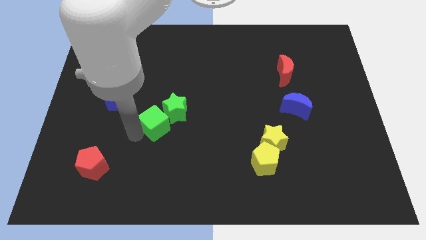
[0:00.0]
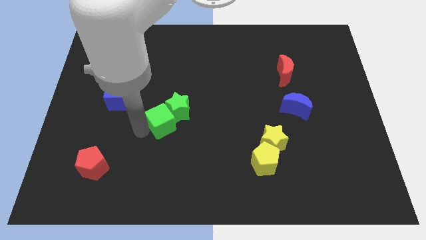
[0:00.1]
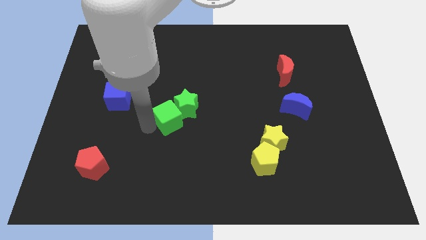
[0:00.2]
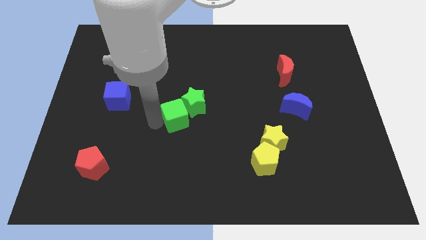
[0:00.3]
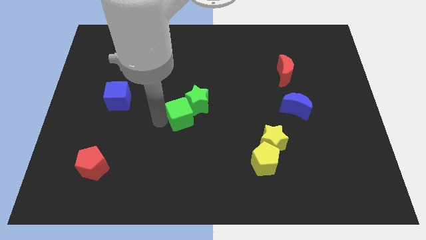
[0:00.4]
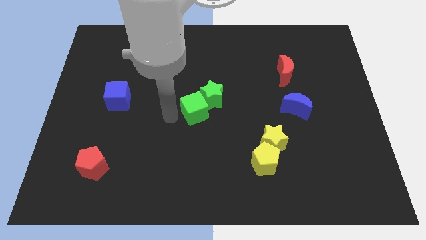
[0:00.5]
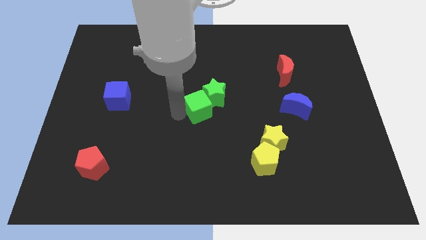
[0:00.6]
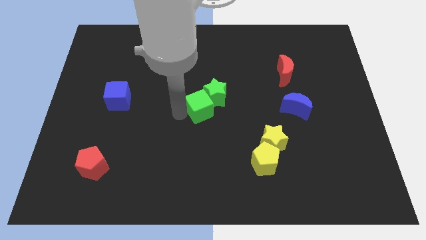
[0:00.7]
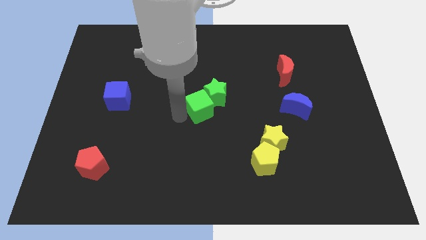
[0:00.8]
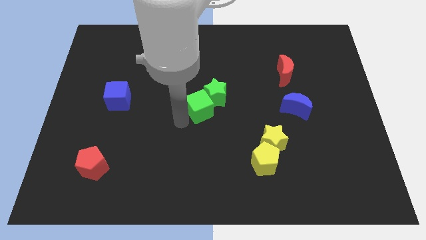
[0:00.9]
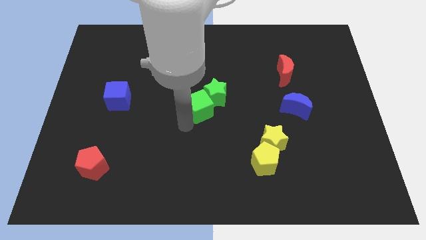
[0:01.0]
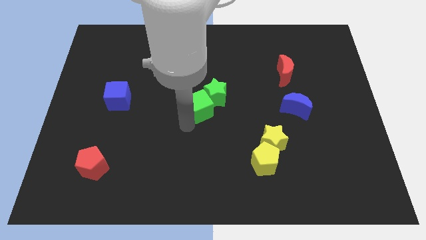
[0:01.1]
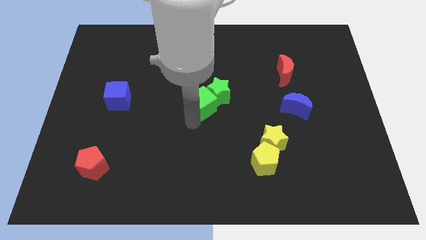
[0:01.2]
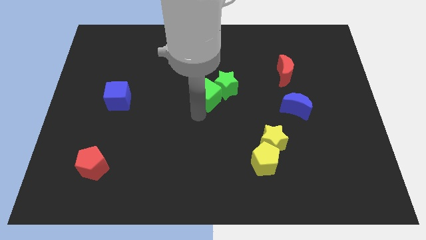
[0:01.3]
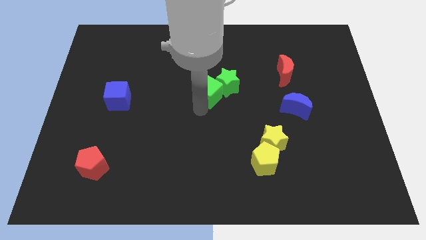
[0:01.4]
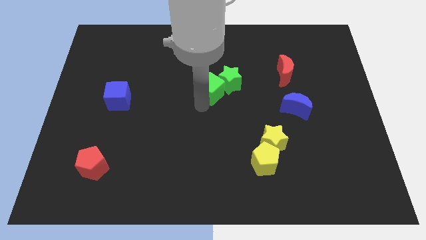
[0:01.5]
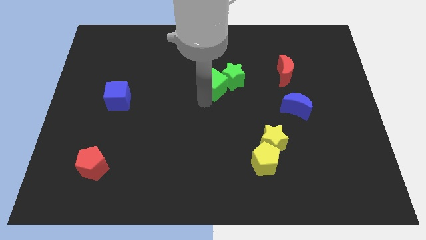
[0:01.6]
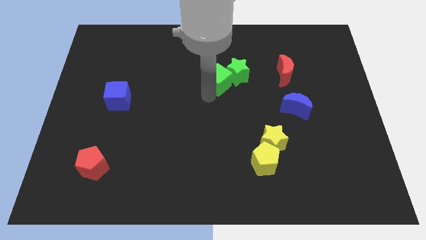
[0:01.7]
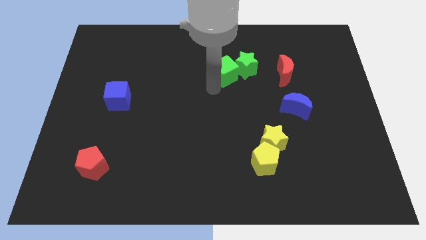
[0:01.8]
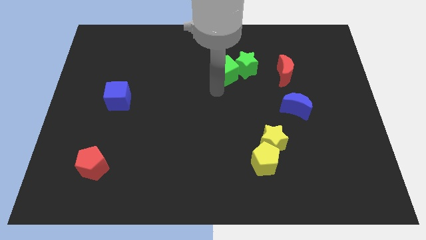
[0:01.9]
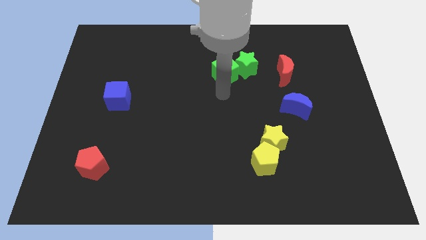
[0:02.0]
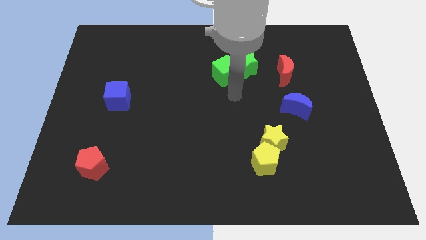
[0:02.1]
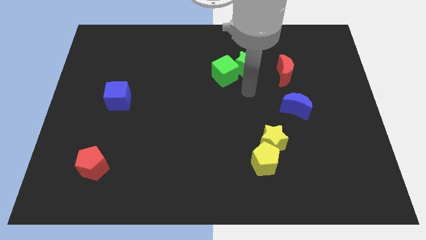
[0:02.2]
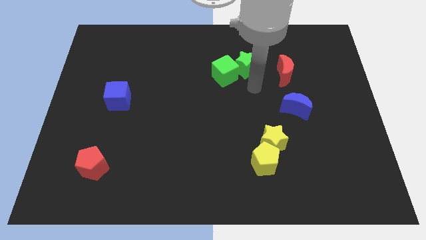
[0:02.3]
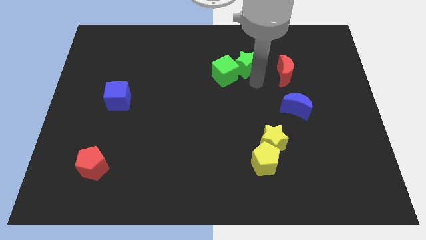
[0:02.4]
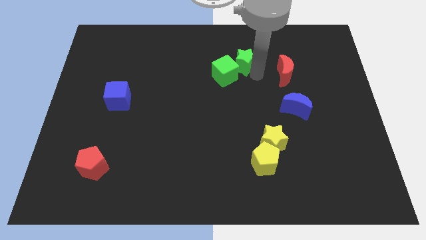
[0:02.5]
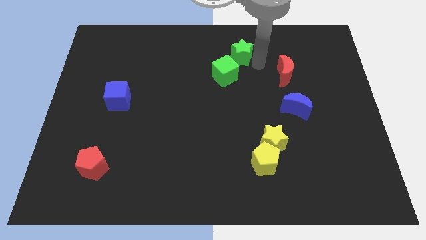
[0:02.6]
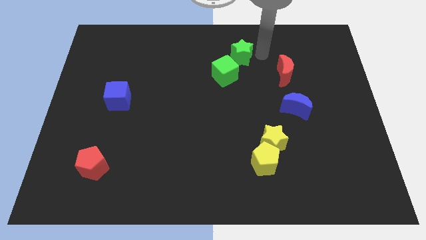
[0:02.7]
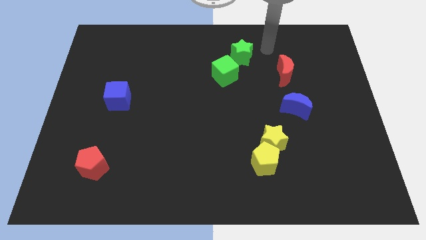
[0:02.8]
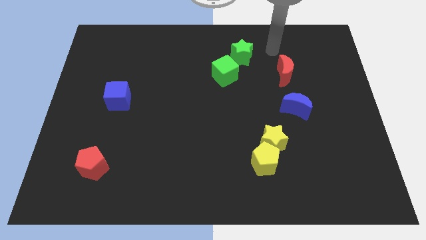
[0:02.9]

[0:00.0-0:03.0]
move green blocks towards red crescent

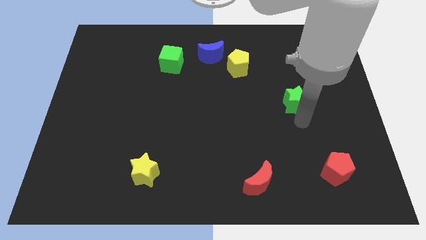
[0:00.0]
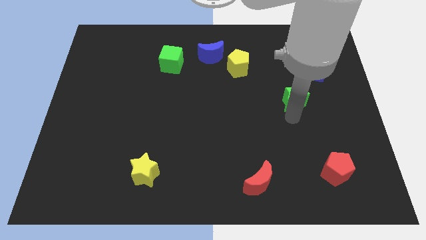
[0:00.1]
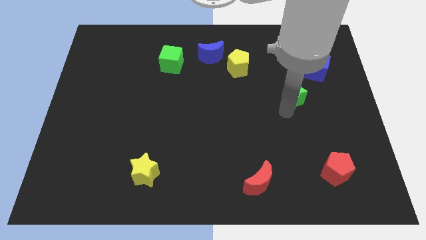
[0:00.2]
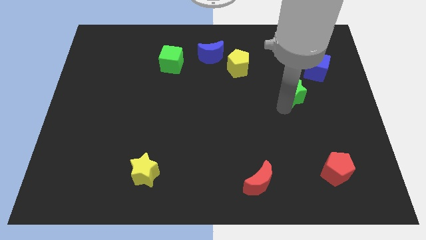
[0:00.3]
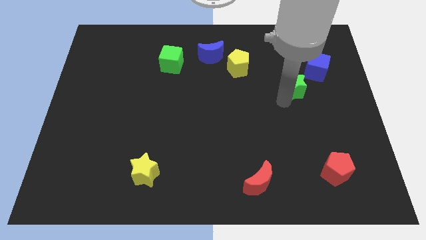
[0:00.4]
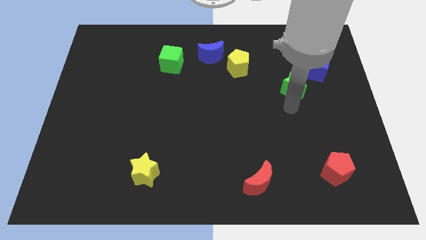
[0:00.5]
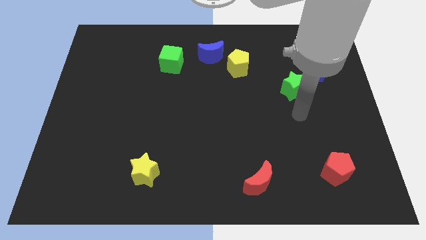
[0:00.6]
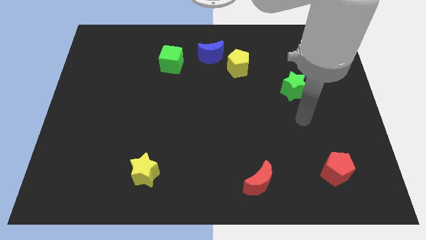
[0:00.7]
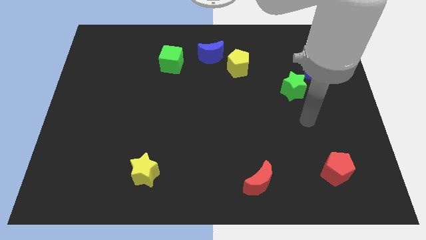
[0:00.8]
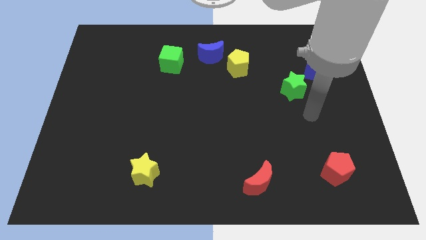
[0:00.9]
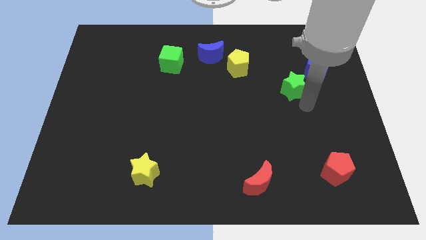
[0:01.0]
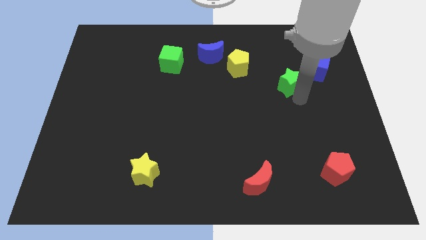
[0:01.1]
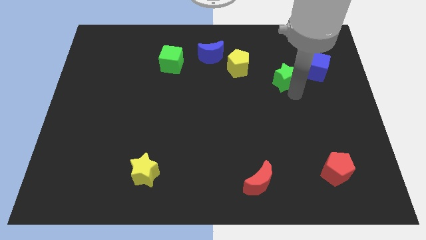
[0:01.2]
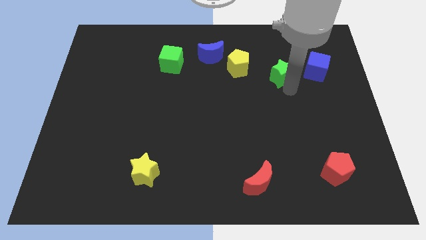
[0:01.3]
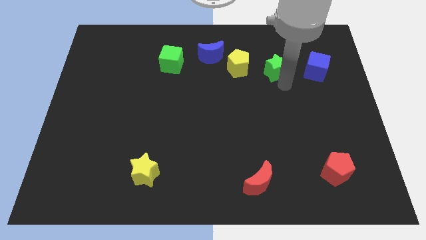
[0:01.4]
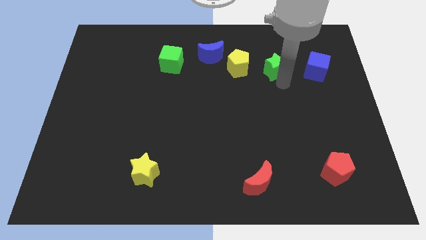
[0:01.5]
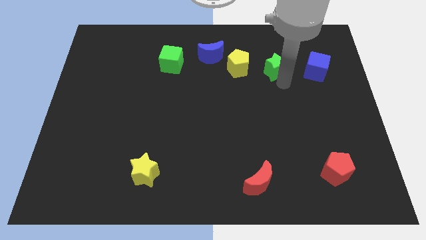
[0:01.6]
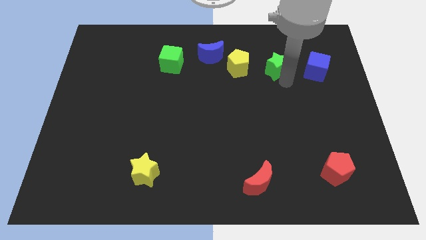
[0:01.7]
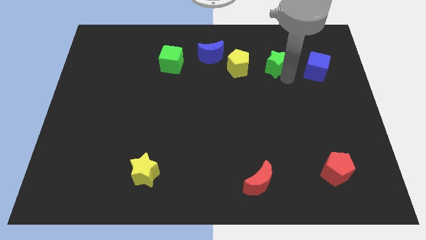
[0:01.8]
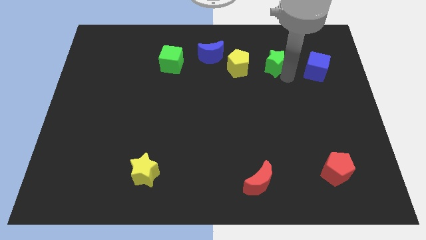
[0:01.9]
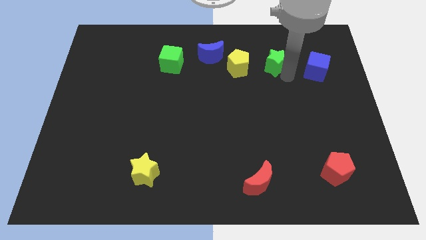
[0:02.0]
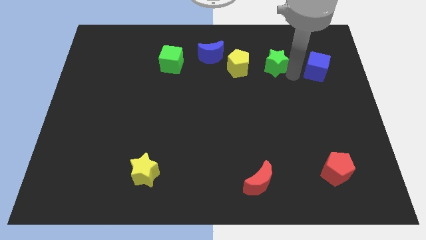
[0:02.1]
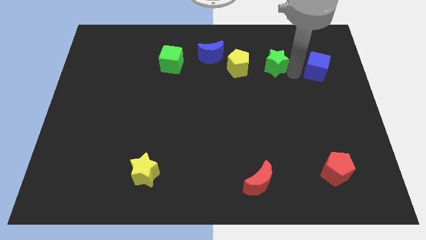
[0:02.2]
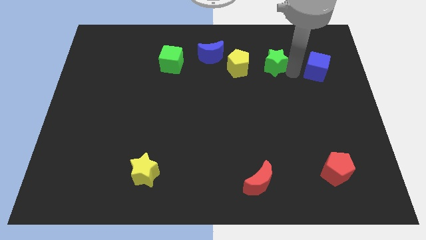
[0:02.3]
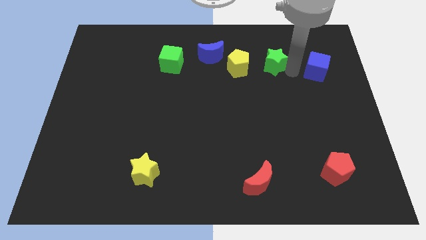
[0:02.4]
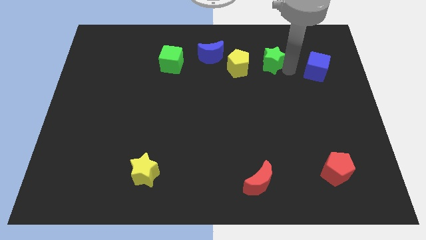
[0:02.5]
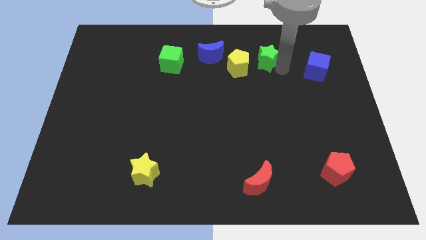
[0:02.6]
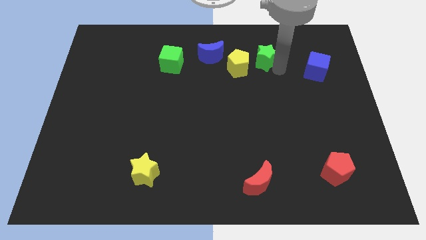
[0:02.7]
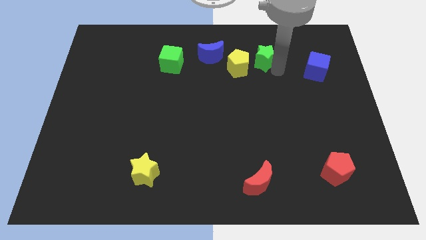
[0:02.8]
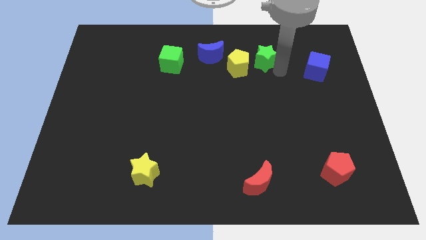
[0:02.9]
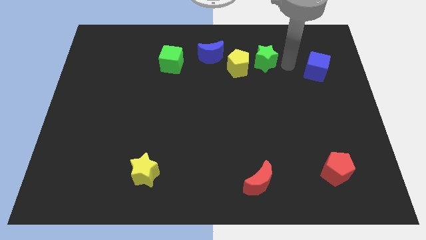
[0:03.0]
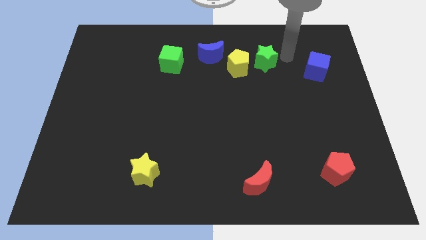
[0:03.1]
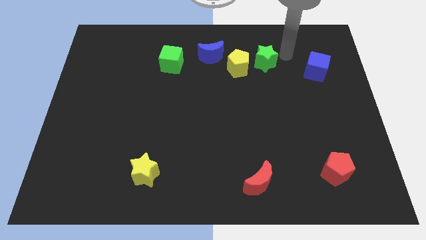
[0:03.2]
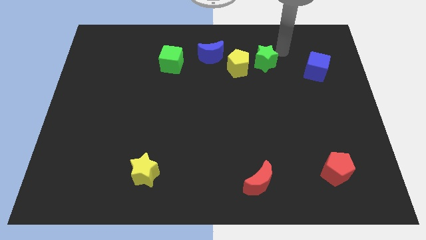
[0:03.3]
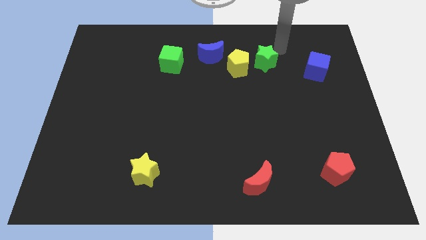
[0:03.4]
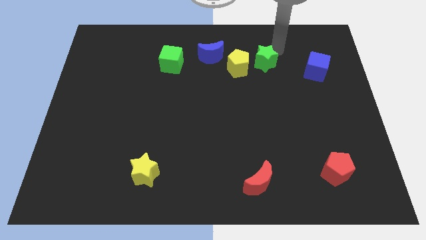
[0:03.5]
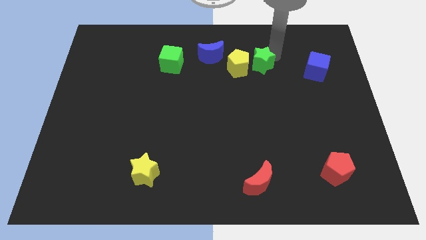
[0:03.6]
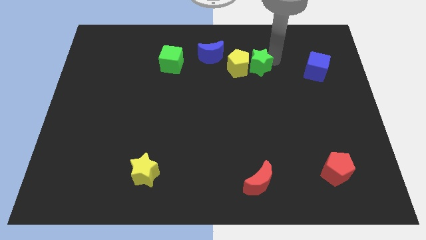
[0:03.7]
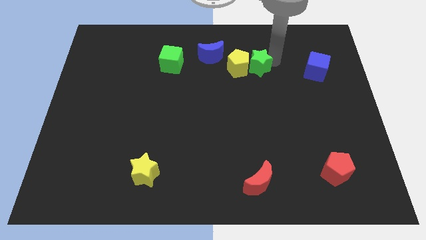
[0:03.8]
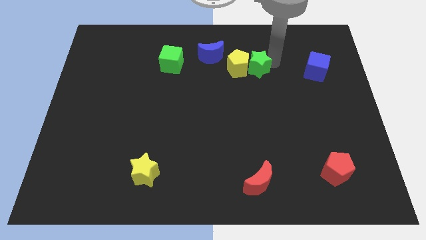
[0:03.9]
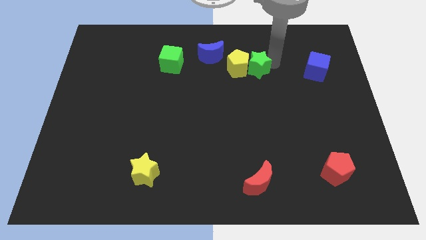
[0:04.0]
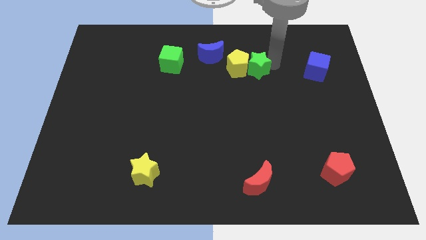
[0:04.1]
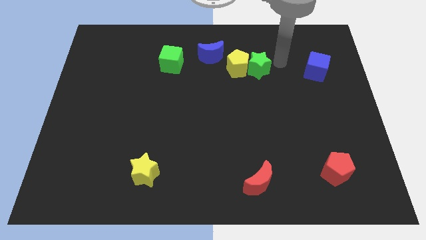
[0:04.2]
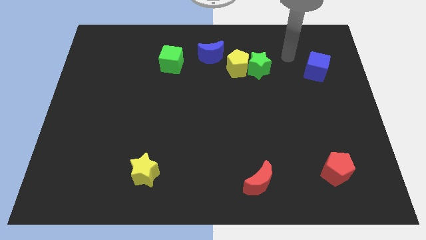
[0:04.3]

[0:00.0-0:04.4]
push the green star right to the yellow pentagon

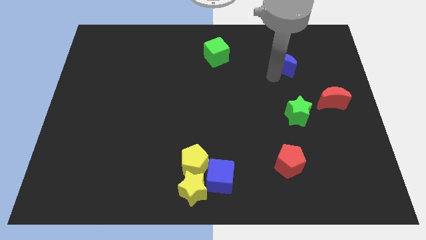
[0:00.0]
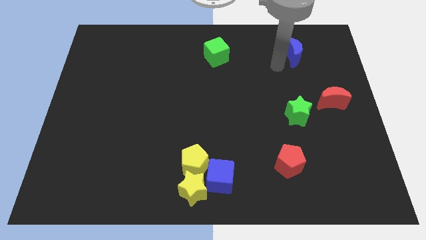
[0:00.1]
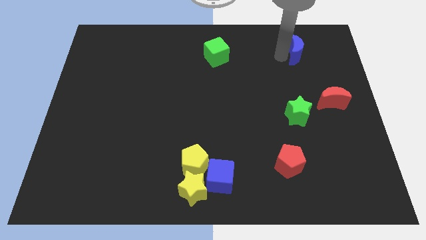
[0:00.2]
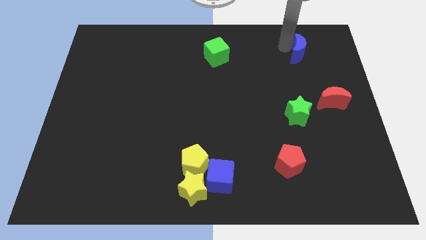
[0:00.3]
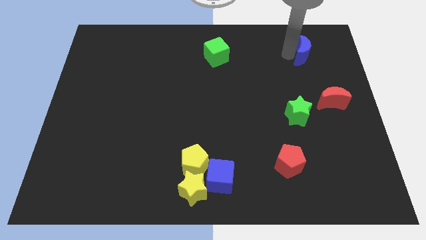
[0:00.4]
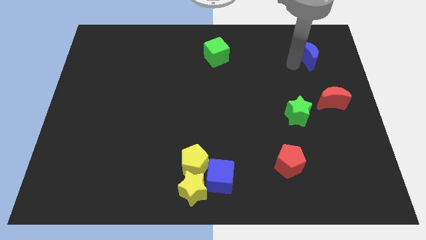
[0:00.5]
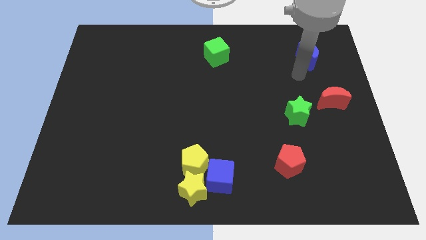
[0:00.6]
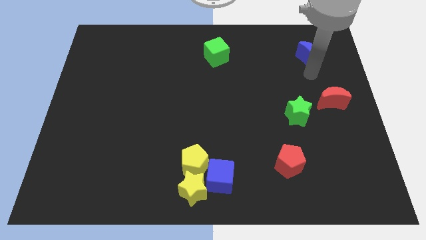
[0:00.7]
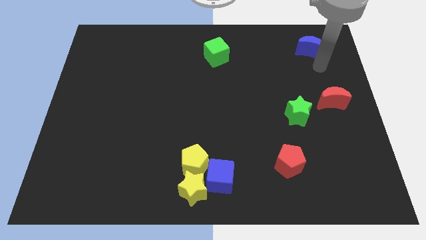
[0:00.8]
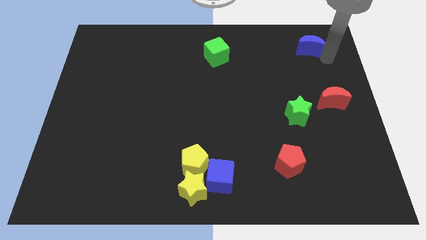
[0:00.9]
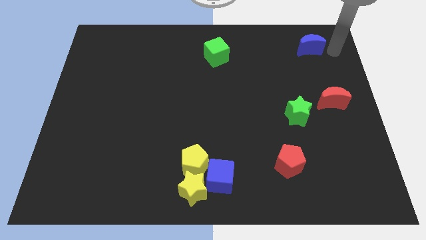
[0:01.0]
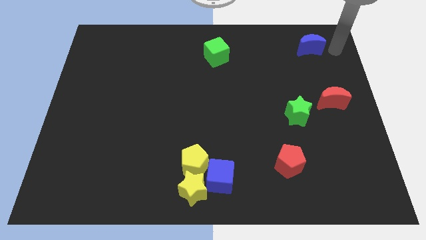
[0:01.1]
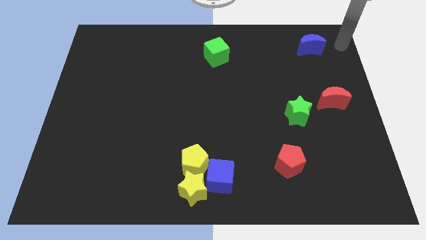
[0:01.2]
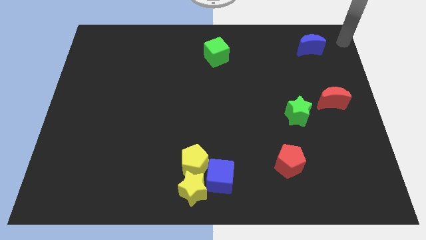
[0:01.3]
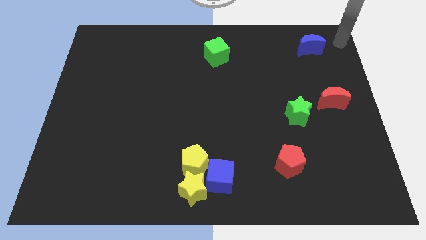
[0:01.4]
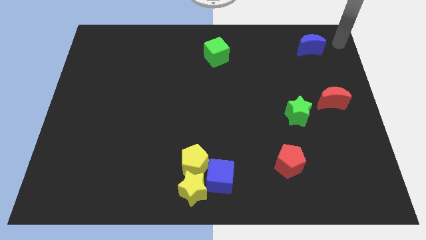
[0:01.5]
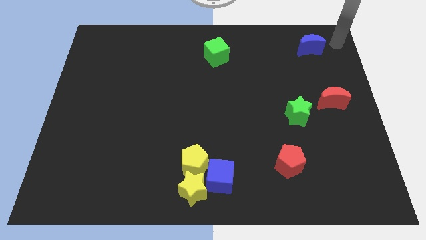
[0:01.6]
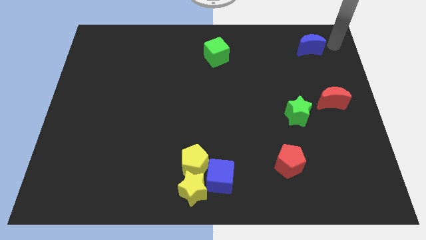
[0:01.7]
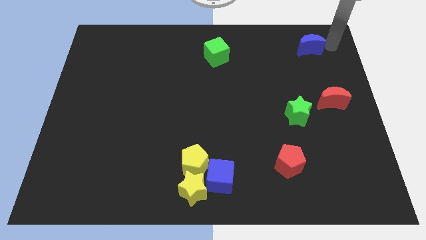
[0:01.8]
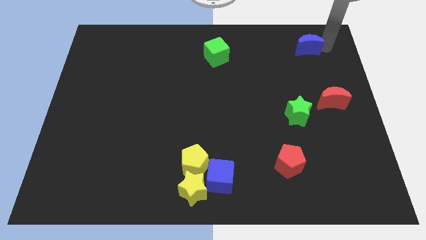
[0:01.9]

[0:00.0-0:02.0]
push the blue crescent to the top right corner of the board
